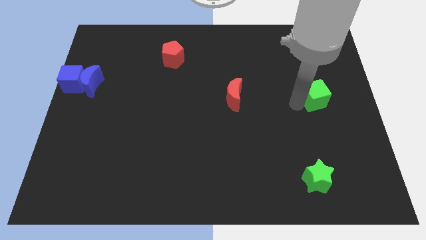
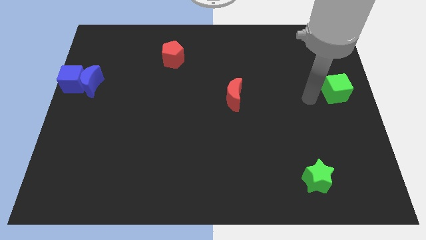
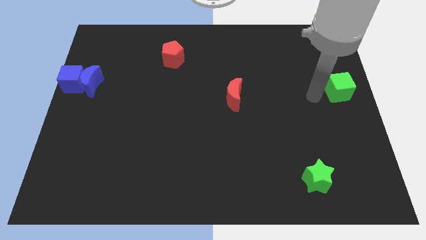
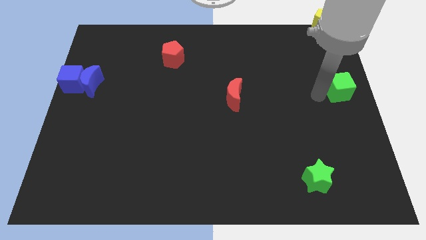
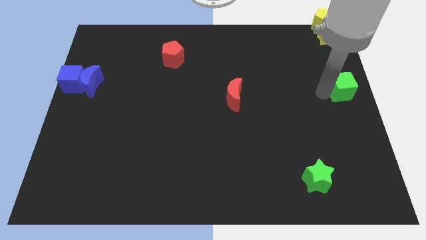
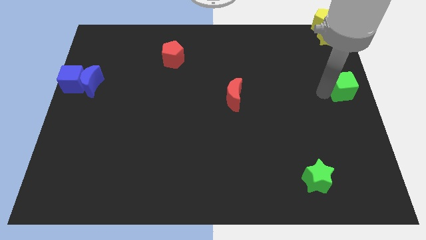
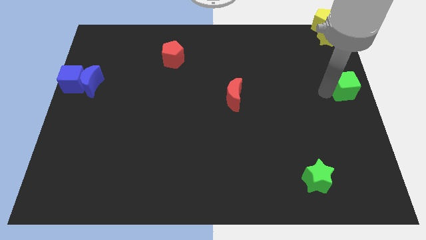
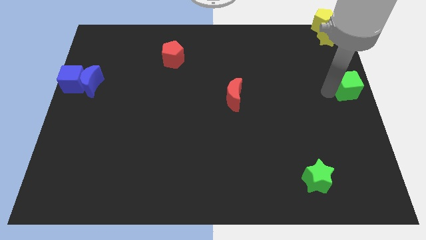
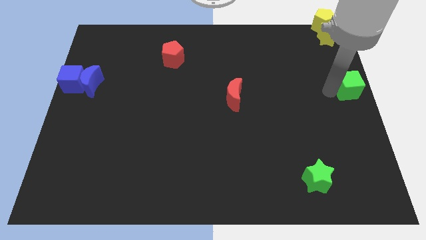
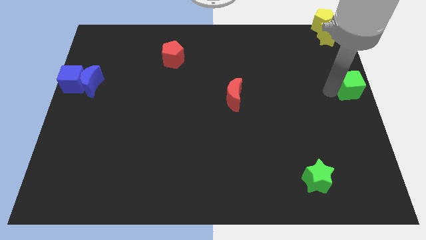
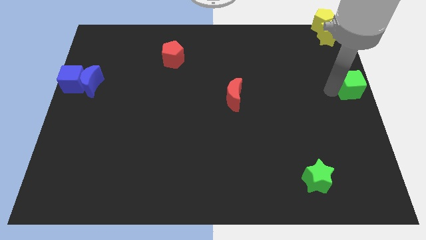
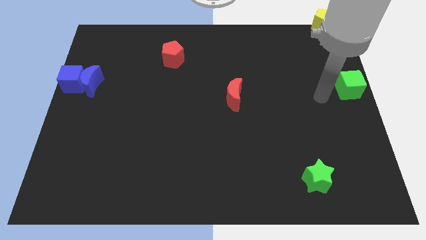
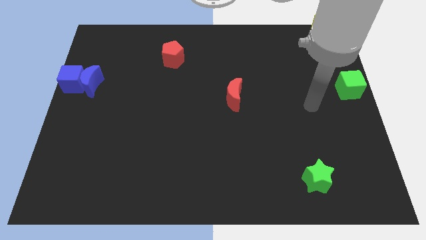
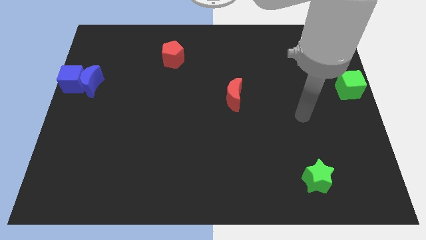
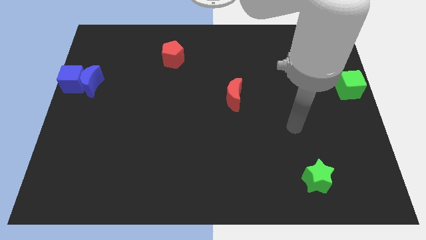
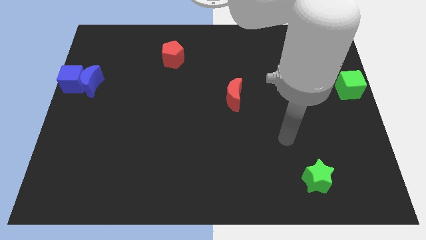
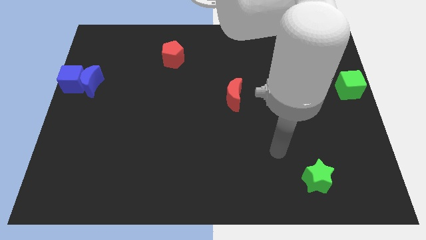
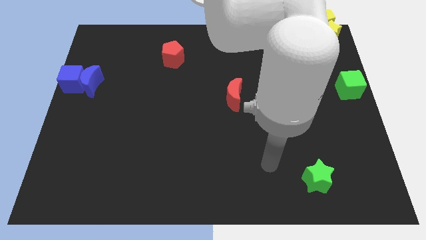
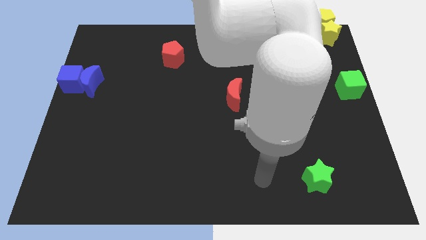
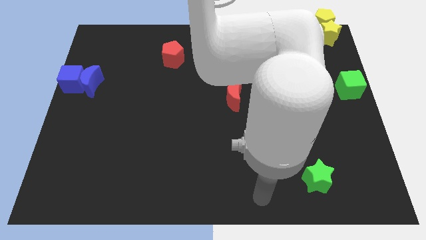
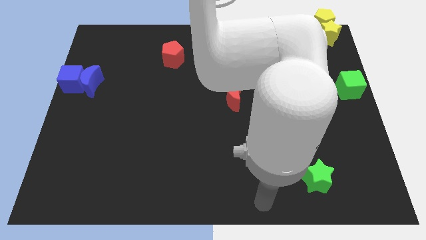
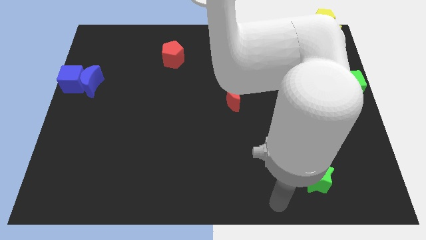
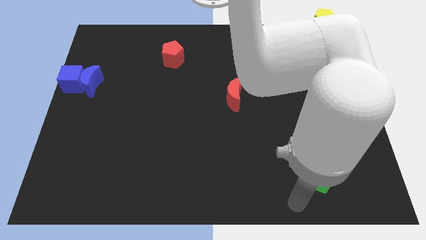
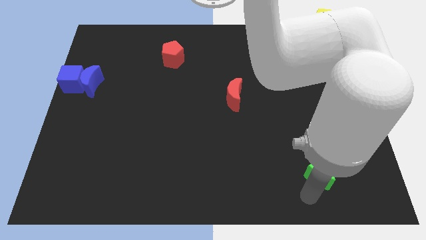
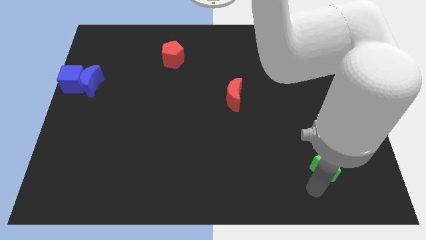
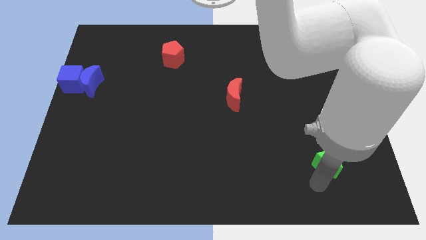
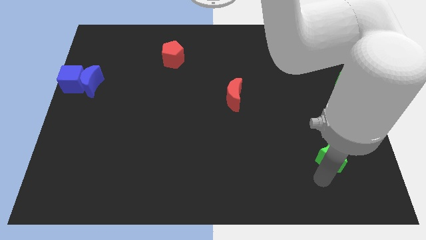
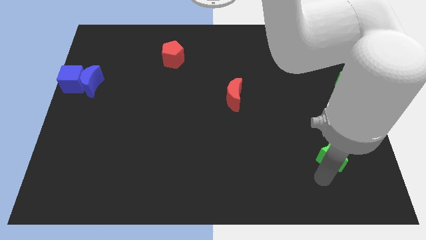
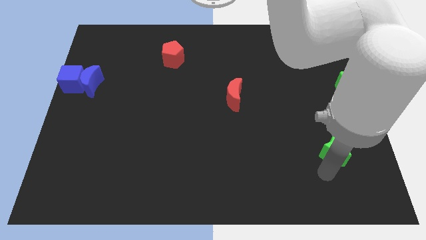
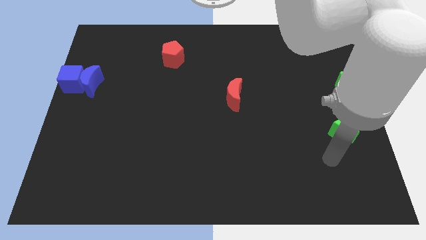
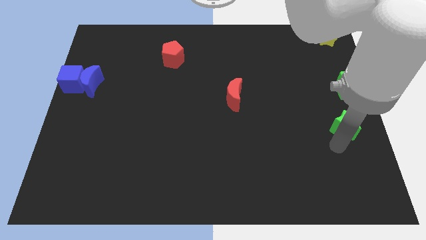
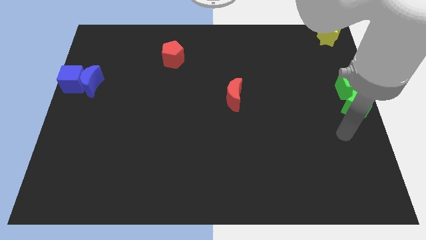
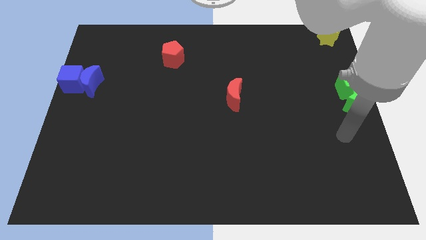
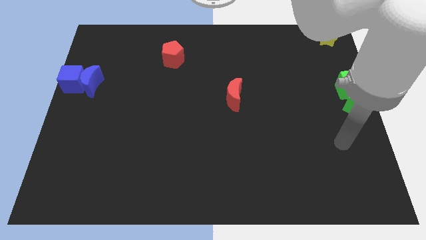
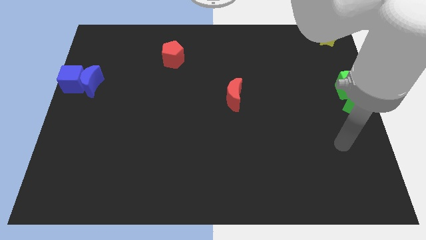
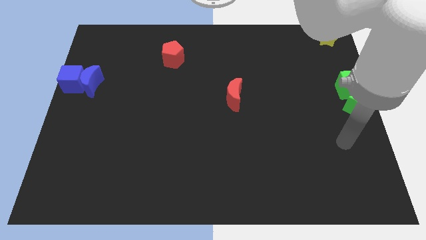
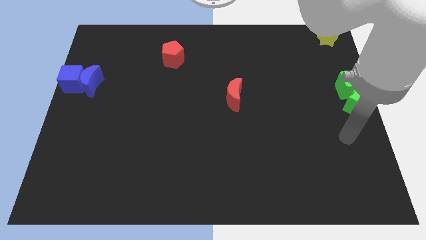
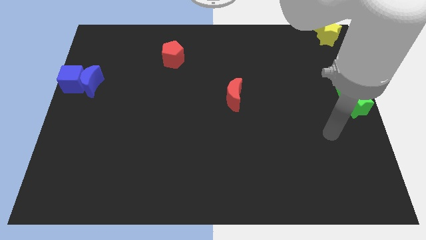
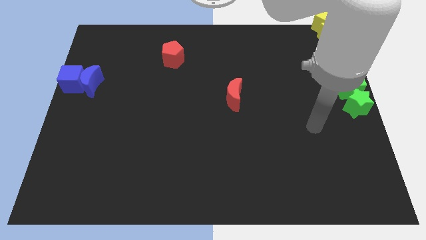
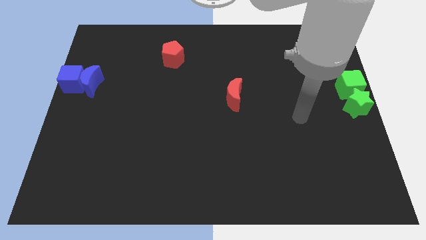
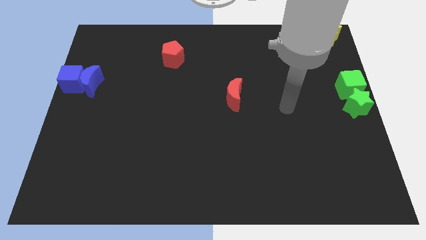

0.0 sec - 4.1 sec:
push the green star towards the bottom of the green cube

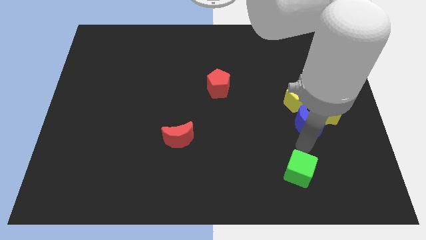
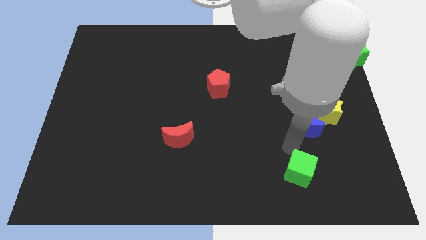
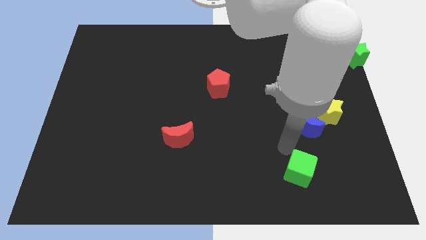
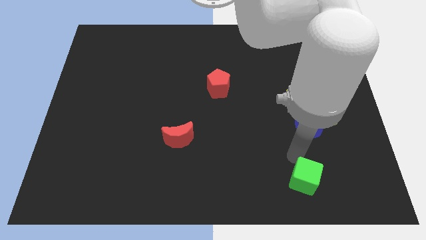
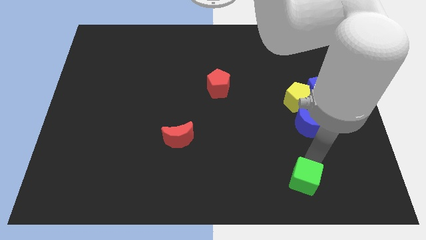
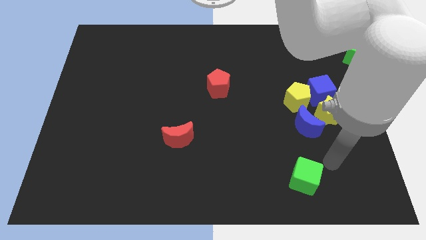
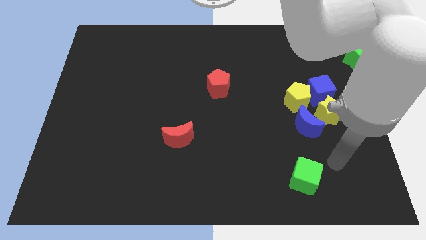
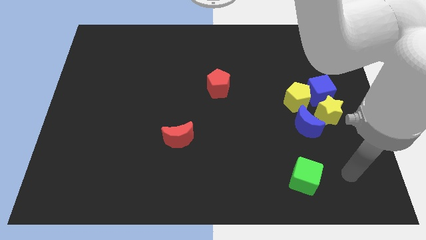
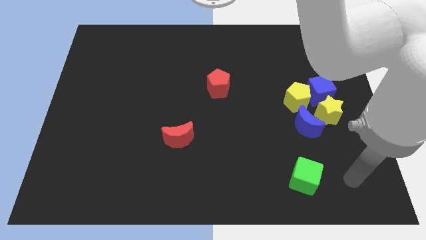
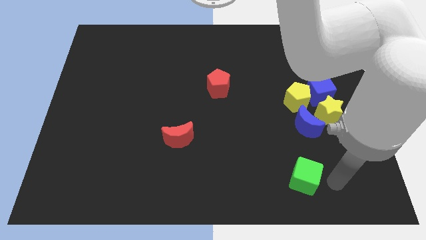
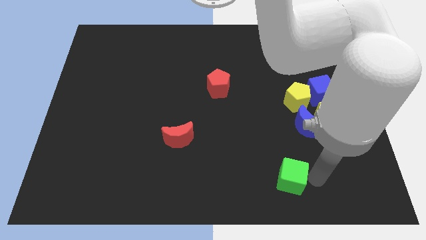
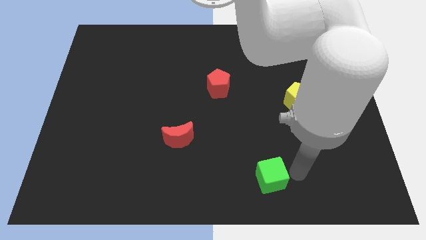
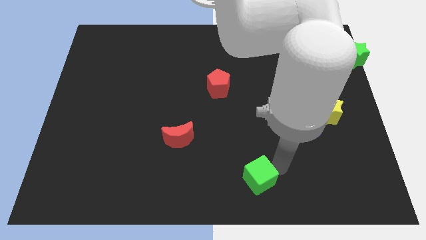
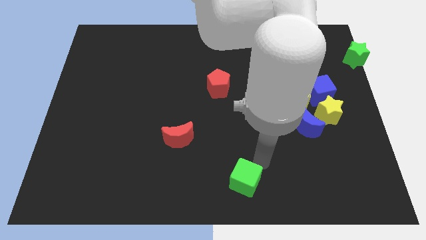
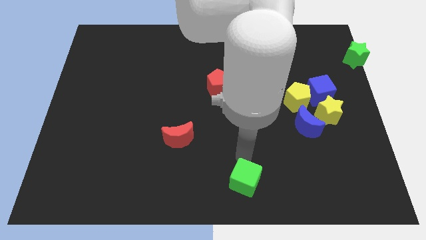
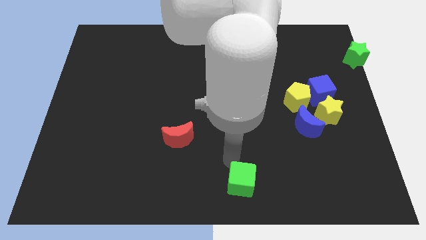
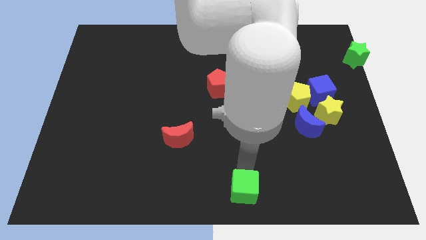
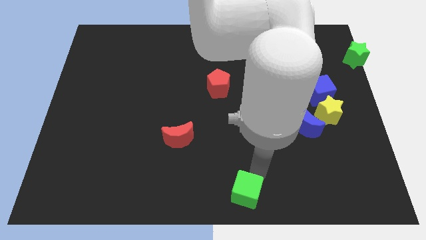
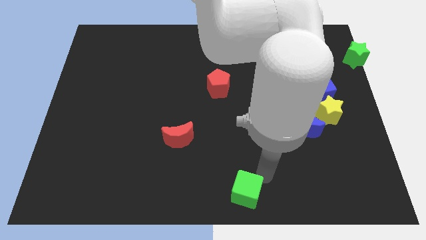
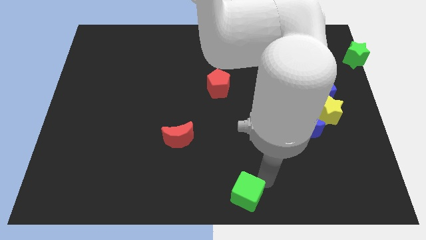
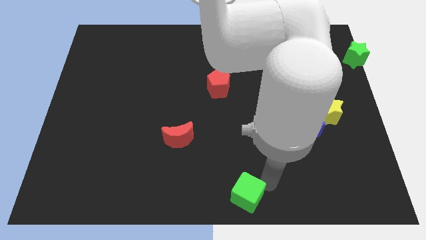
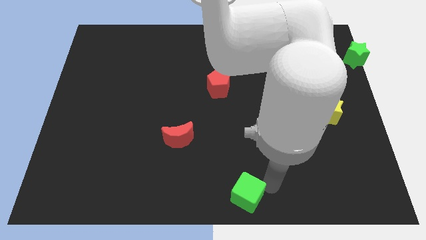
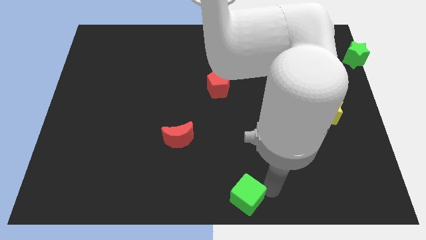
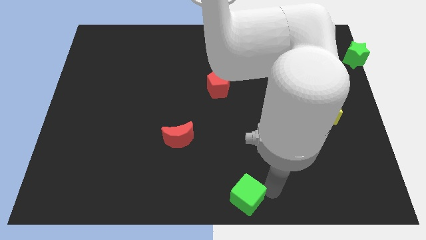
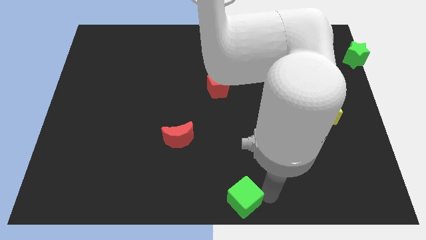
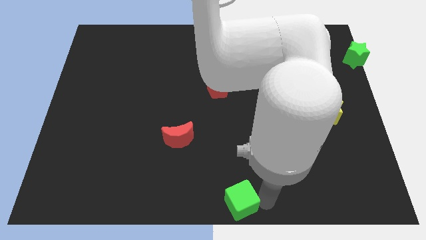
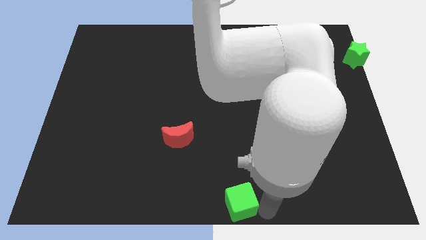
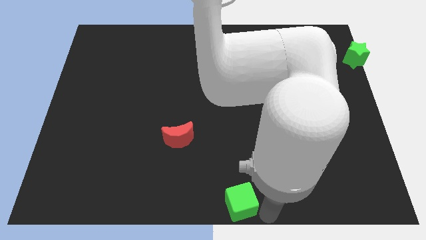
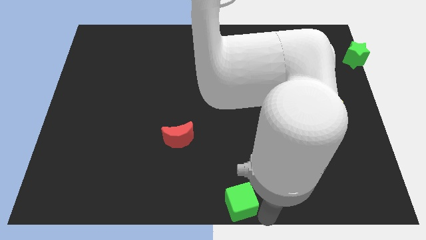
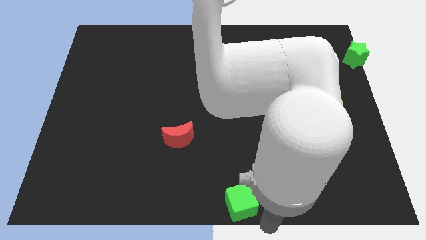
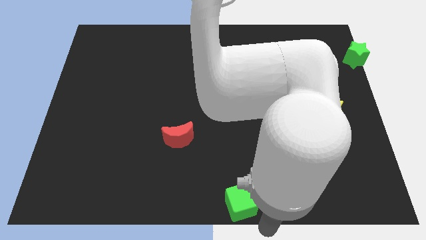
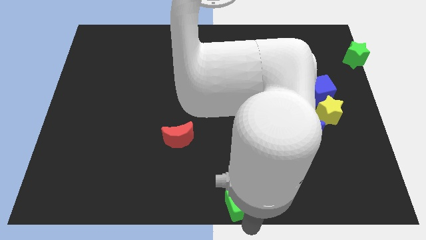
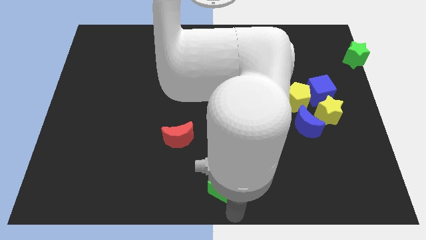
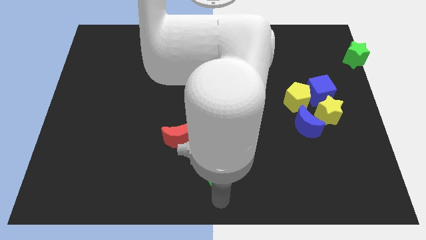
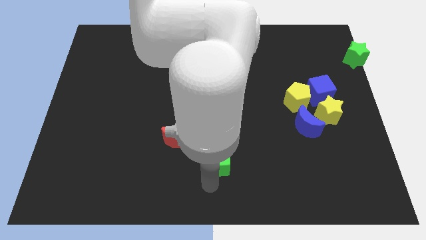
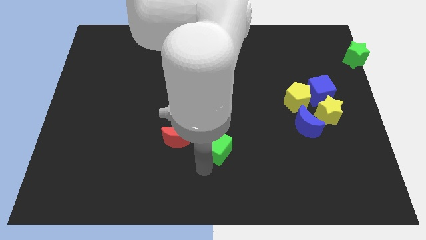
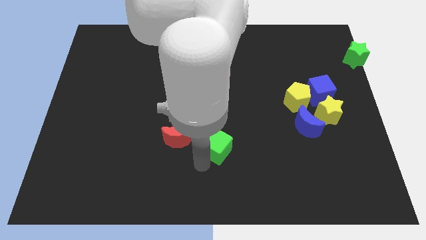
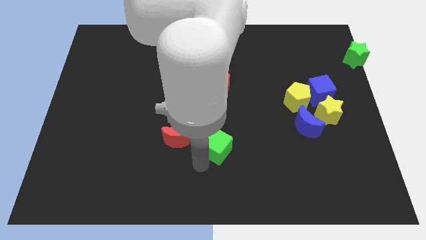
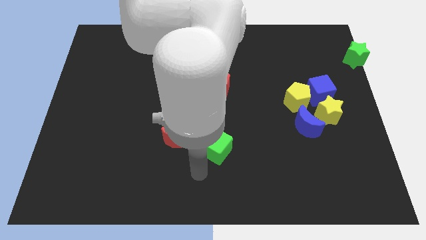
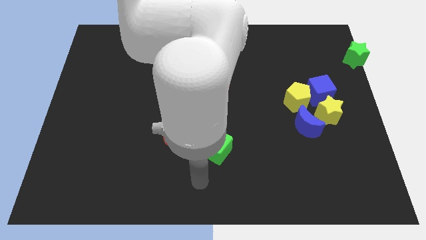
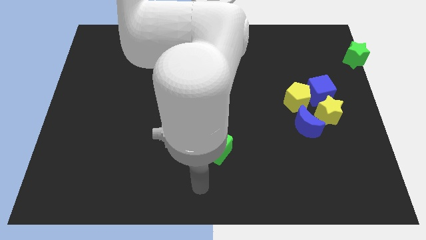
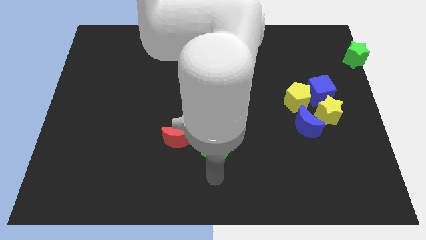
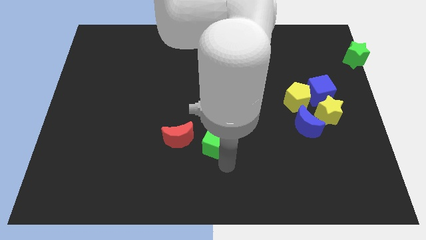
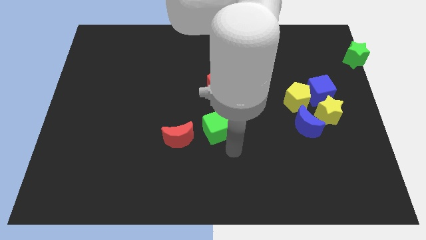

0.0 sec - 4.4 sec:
place the green cube right to the red moon

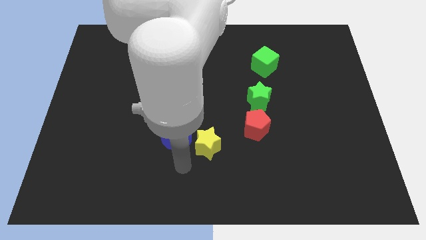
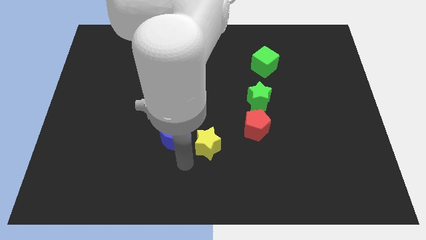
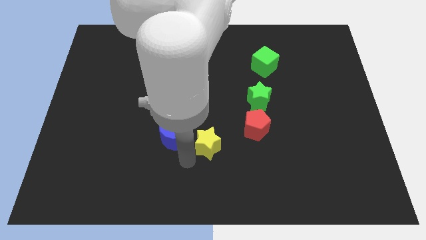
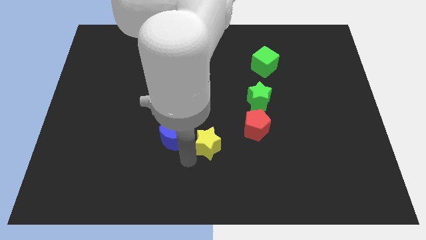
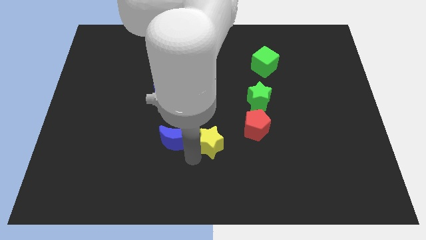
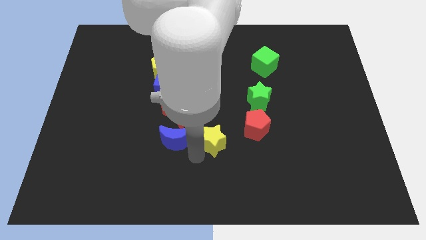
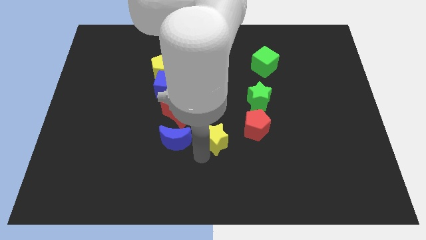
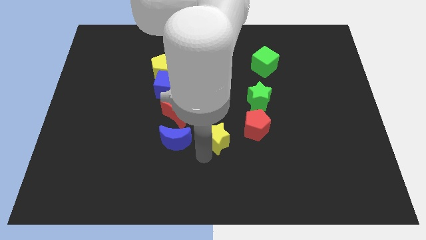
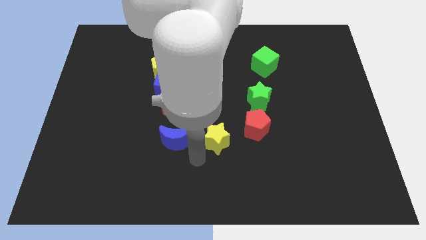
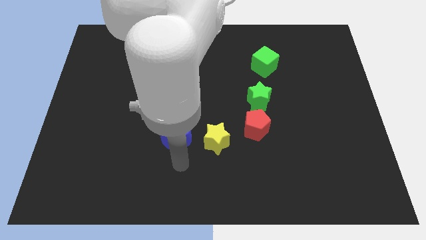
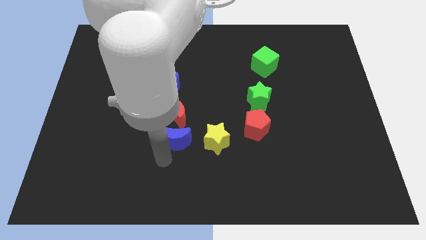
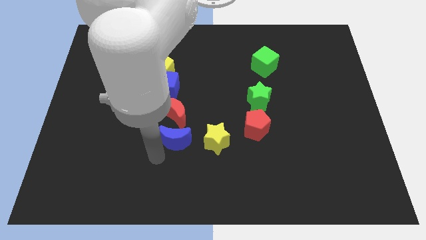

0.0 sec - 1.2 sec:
move the yellow star slightly towards the red pentagon
